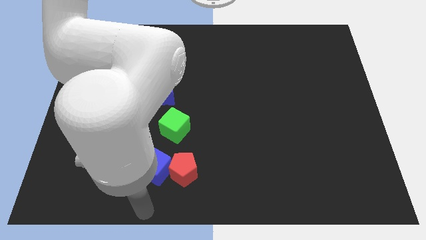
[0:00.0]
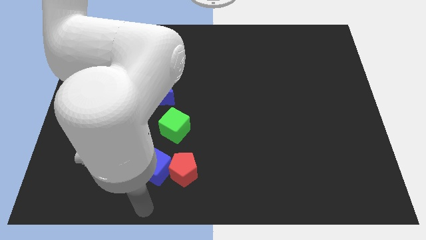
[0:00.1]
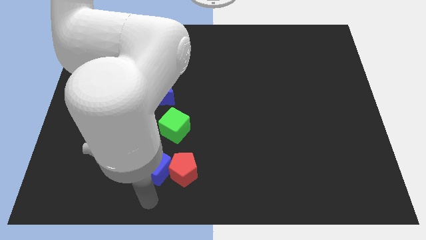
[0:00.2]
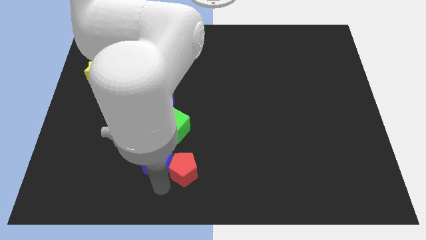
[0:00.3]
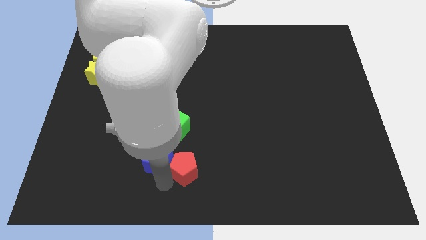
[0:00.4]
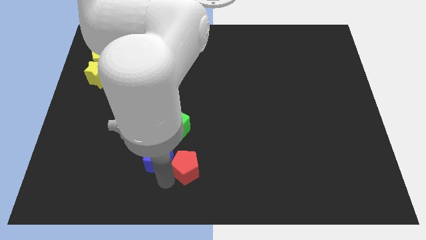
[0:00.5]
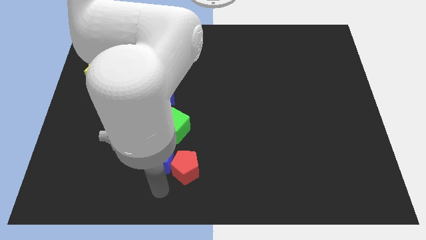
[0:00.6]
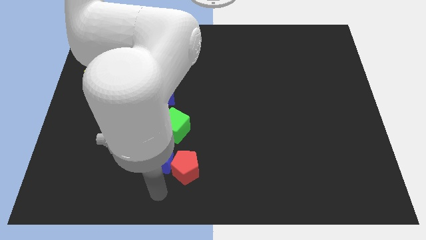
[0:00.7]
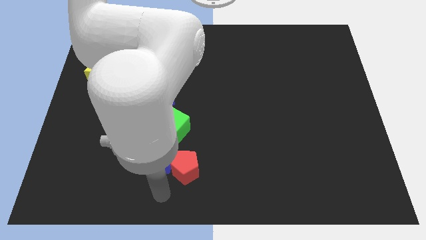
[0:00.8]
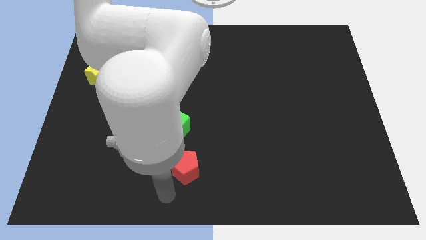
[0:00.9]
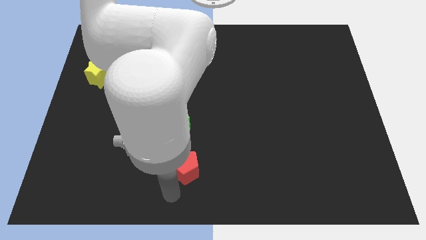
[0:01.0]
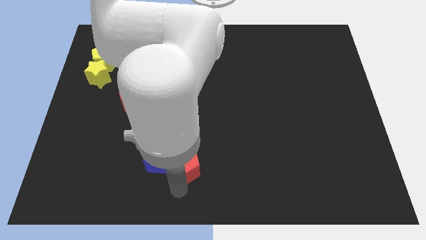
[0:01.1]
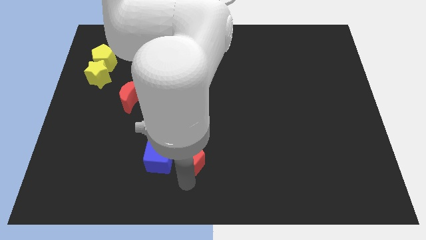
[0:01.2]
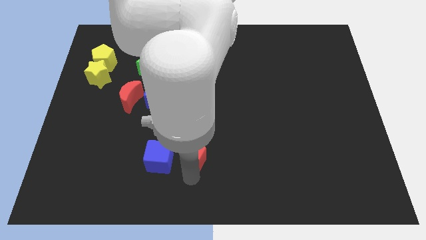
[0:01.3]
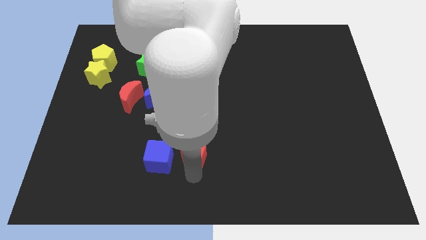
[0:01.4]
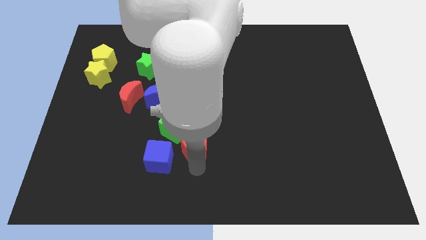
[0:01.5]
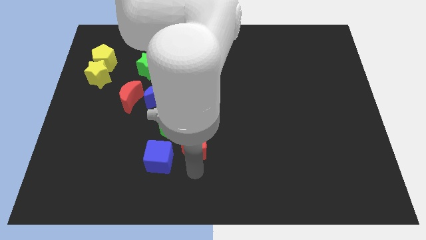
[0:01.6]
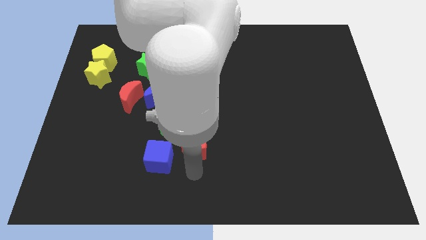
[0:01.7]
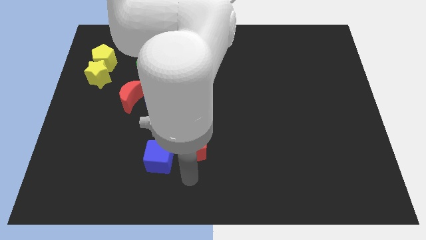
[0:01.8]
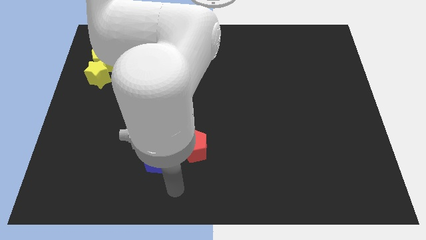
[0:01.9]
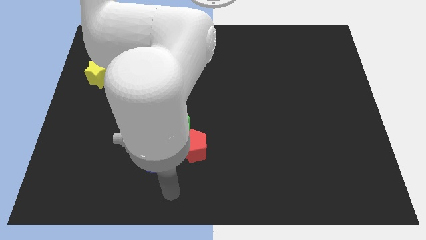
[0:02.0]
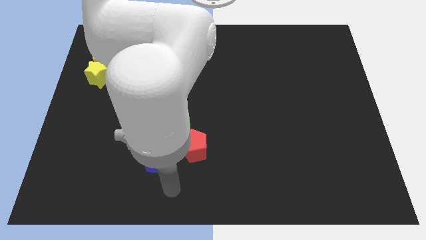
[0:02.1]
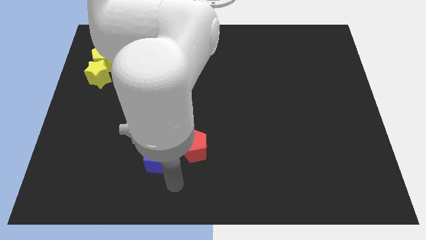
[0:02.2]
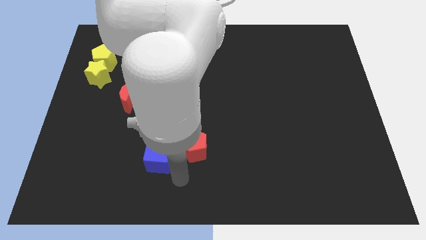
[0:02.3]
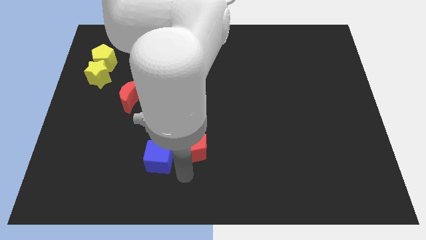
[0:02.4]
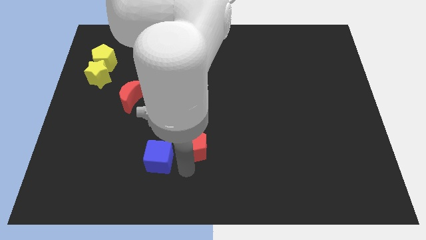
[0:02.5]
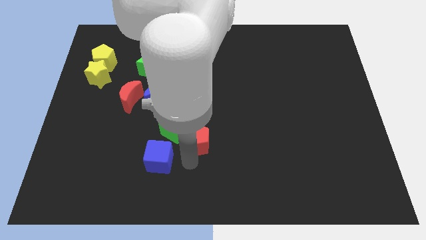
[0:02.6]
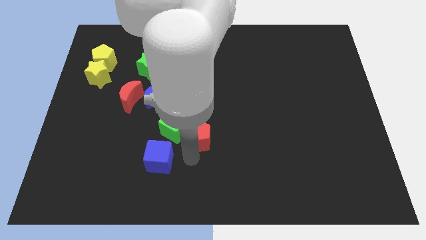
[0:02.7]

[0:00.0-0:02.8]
push the red pentagon to the right of the green cube

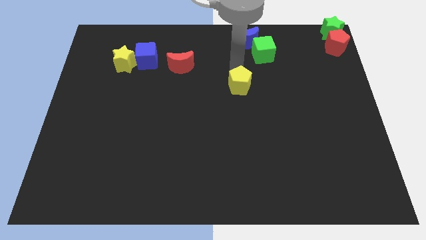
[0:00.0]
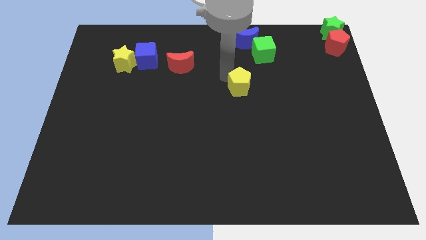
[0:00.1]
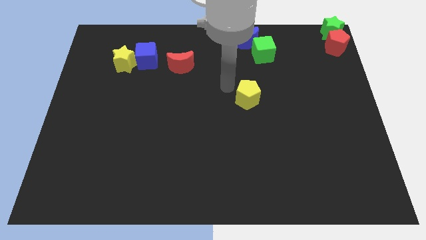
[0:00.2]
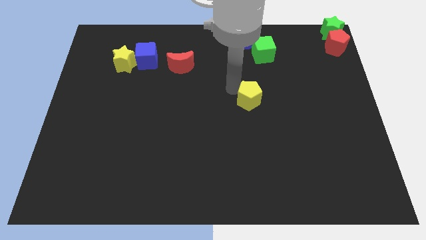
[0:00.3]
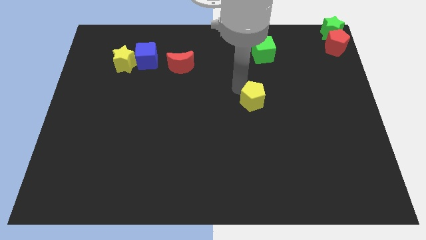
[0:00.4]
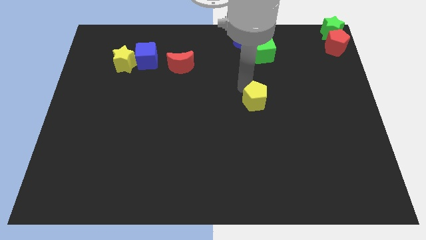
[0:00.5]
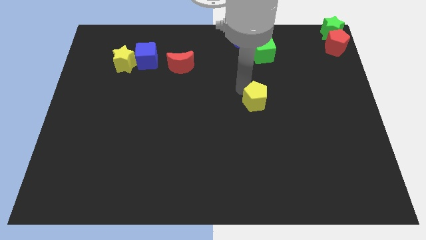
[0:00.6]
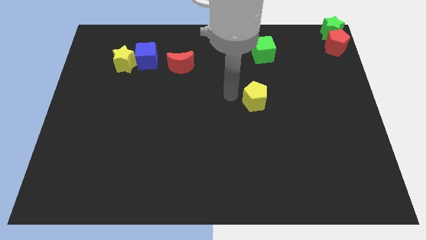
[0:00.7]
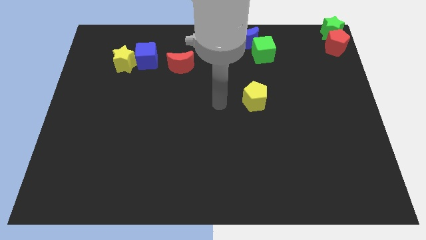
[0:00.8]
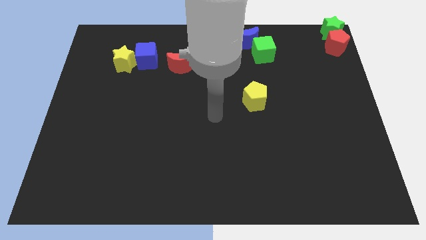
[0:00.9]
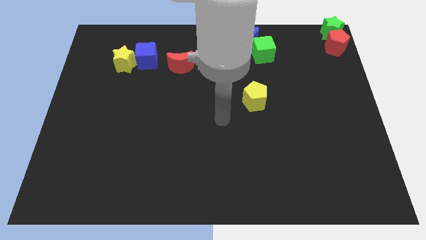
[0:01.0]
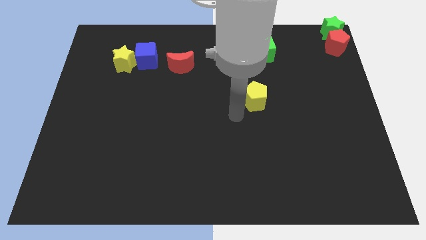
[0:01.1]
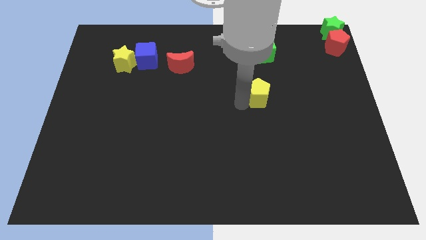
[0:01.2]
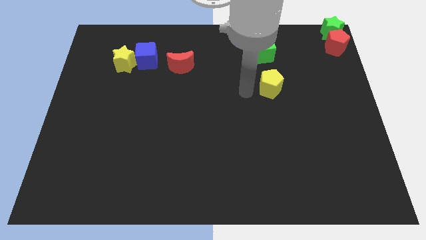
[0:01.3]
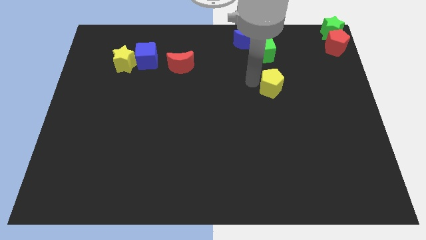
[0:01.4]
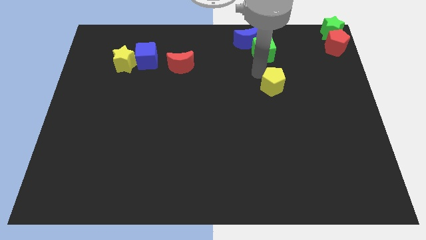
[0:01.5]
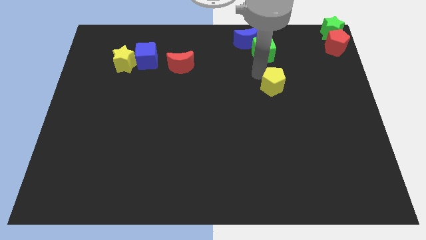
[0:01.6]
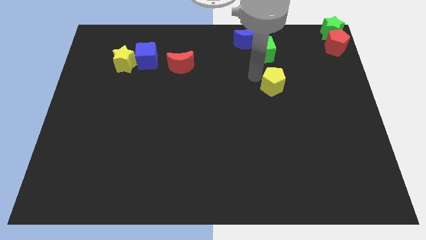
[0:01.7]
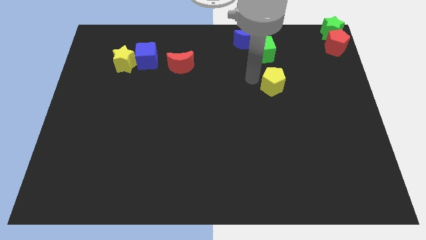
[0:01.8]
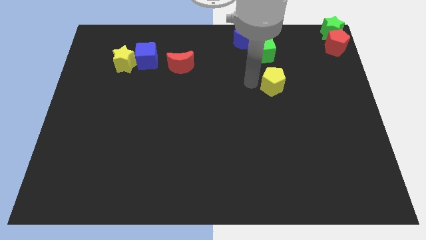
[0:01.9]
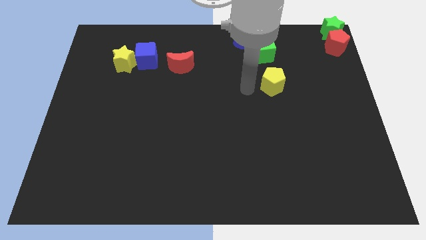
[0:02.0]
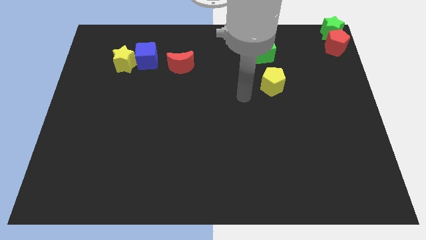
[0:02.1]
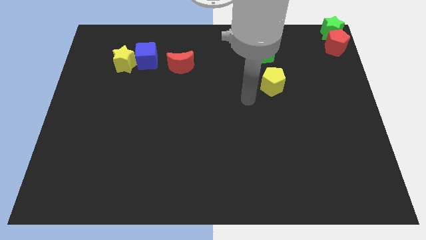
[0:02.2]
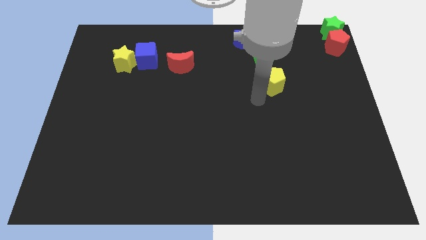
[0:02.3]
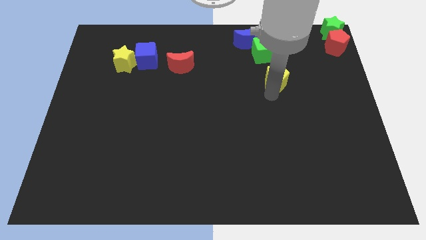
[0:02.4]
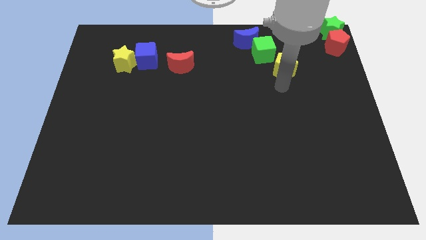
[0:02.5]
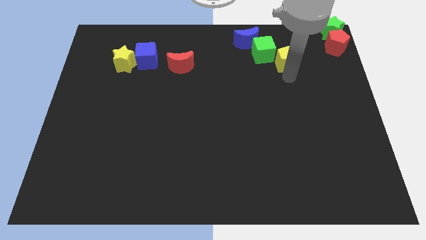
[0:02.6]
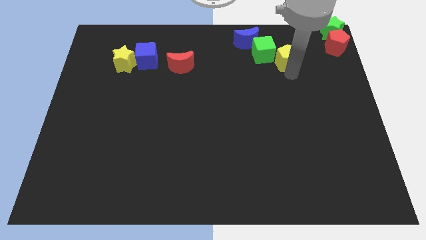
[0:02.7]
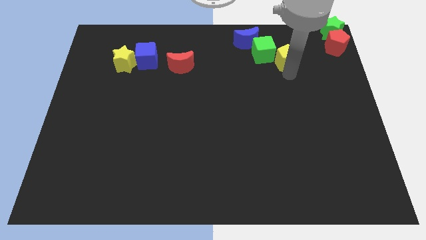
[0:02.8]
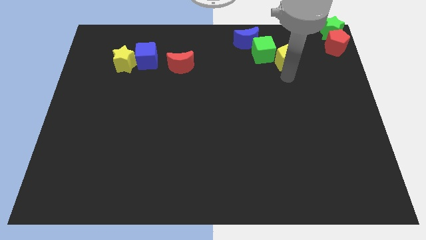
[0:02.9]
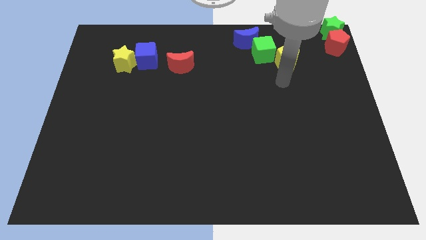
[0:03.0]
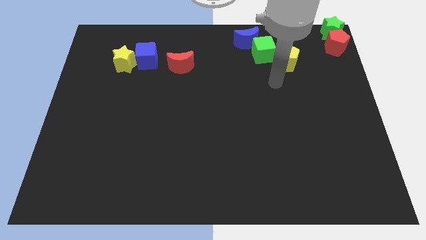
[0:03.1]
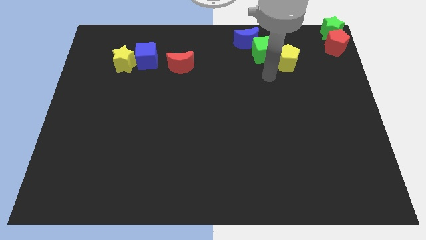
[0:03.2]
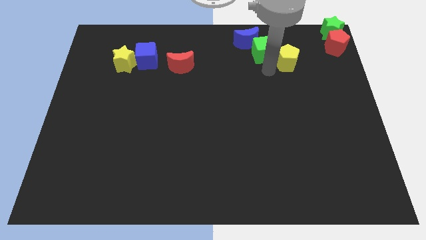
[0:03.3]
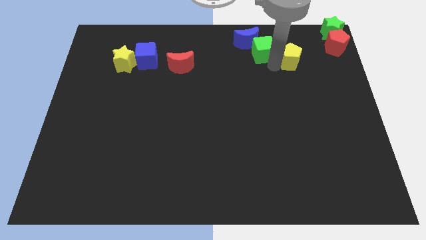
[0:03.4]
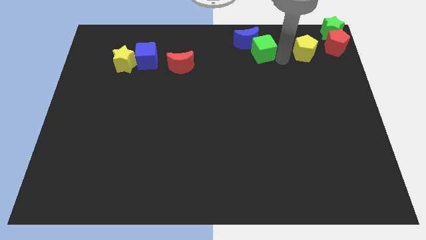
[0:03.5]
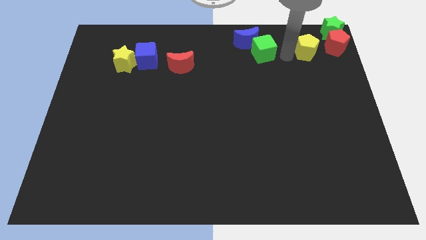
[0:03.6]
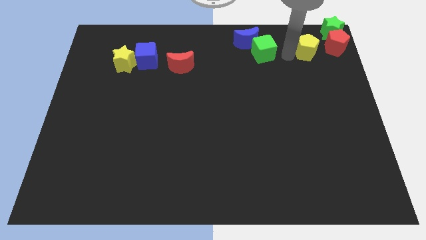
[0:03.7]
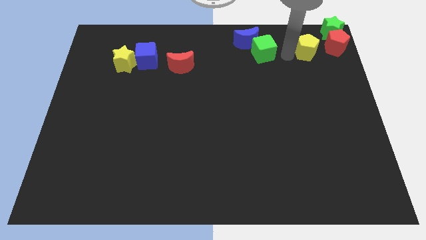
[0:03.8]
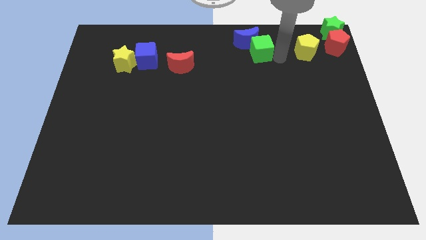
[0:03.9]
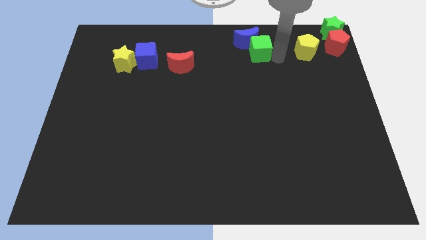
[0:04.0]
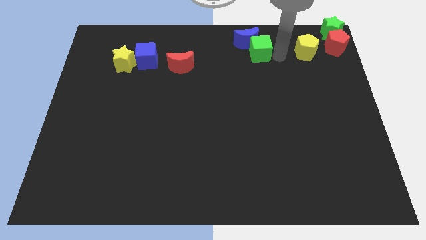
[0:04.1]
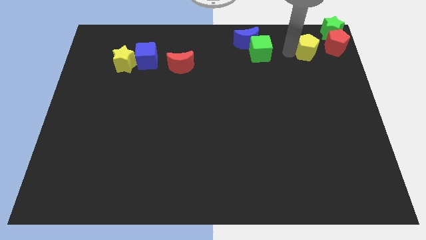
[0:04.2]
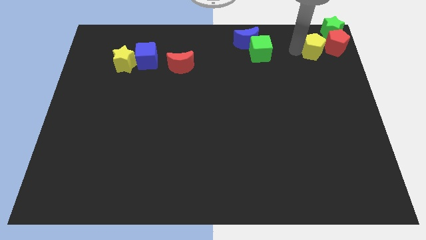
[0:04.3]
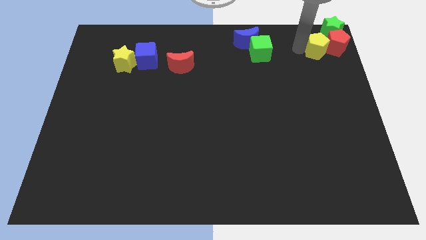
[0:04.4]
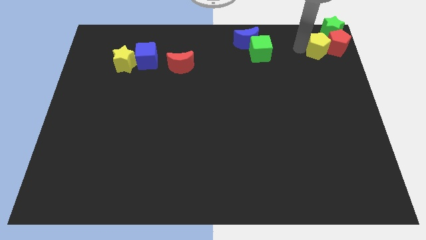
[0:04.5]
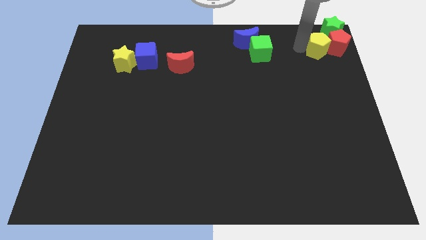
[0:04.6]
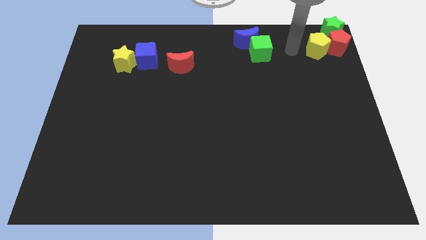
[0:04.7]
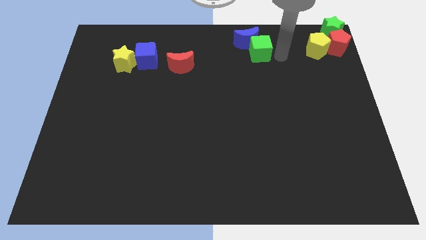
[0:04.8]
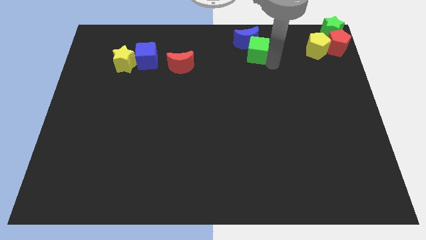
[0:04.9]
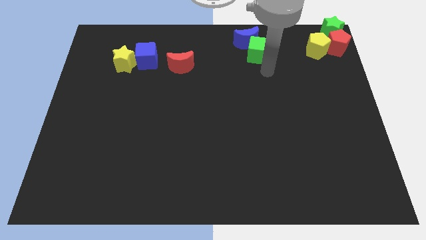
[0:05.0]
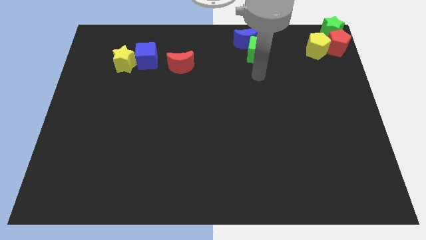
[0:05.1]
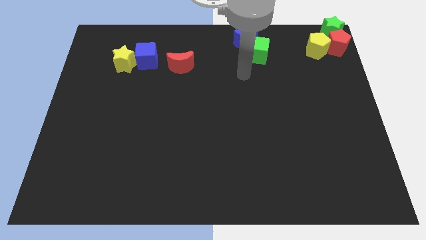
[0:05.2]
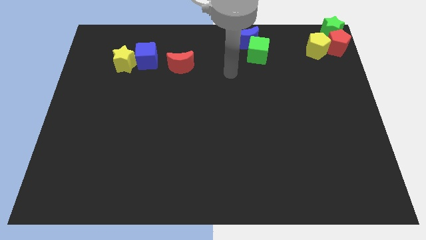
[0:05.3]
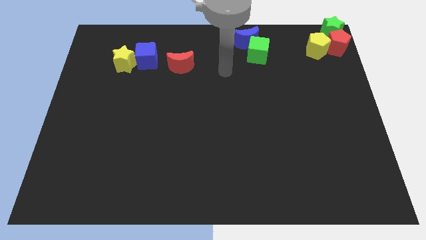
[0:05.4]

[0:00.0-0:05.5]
push the yellow pentagon into the red pentagon

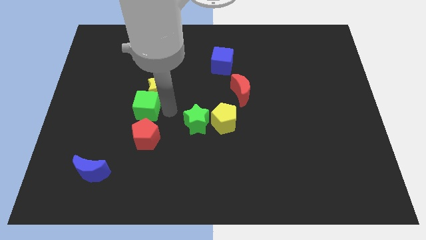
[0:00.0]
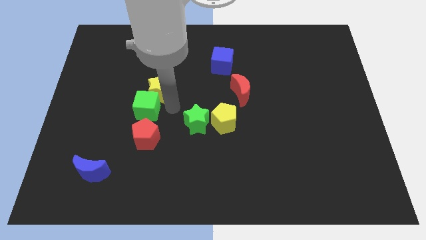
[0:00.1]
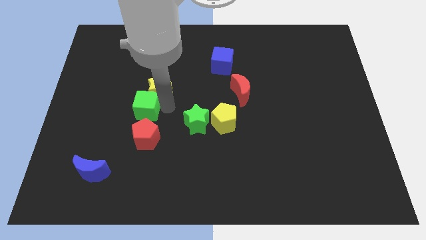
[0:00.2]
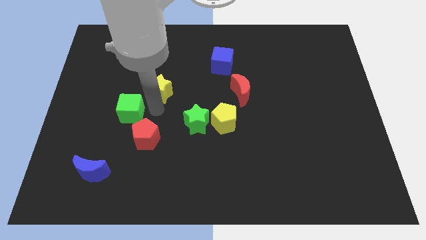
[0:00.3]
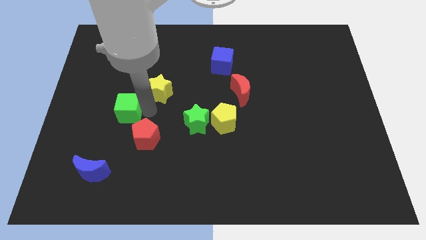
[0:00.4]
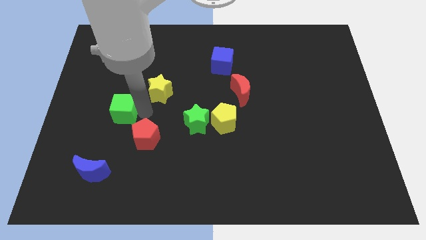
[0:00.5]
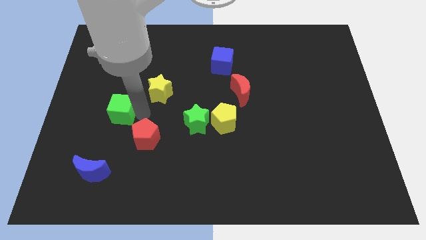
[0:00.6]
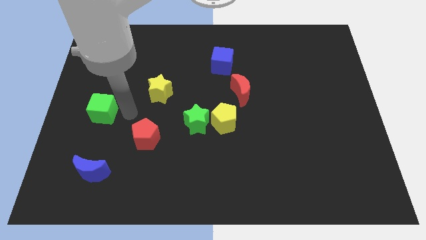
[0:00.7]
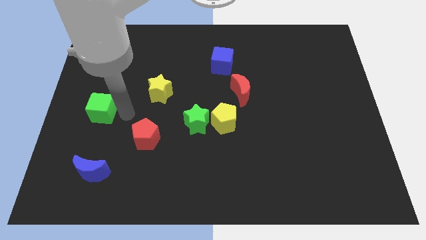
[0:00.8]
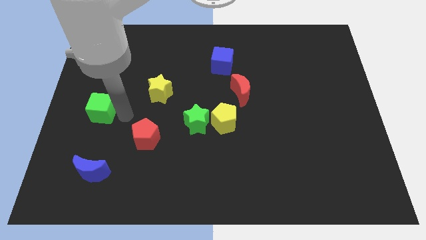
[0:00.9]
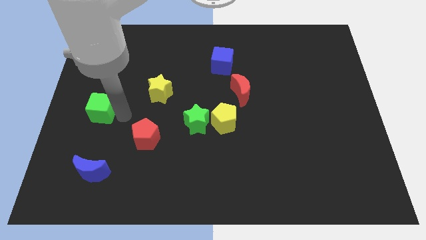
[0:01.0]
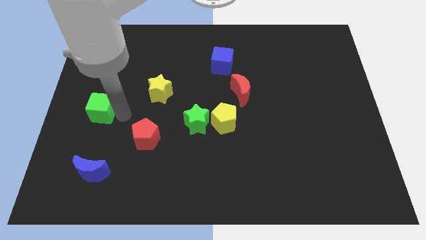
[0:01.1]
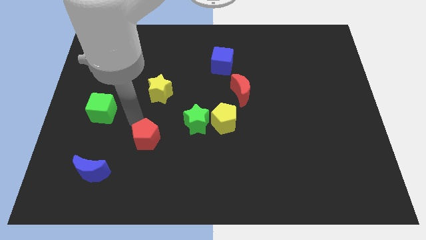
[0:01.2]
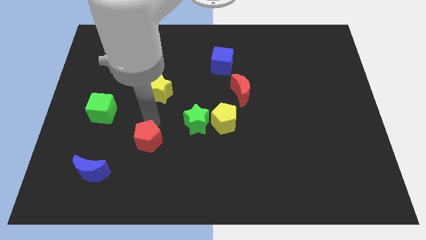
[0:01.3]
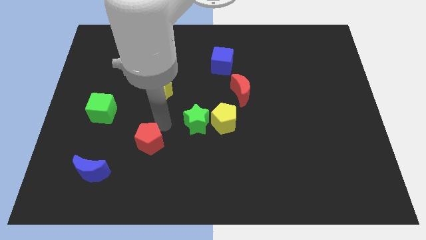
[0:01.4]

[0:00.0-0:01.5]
place green cube to the left center of the board
